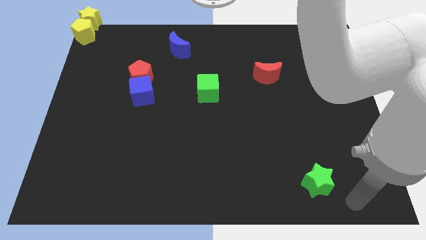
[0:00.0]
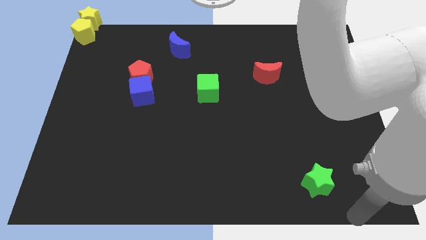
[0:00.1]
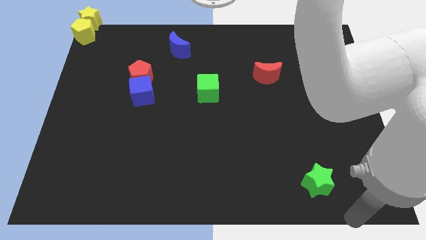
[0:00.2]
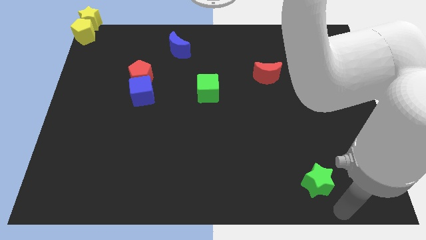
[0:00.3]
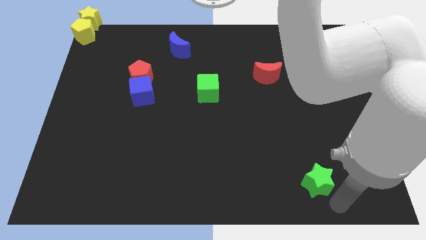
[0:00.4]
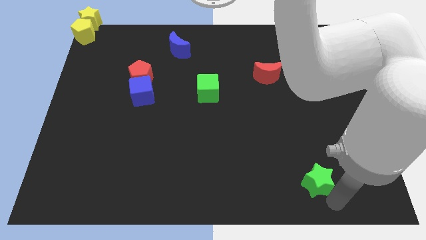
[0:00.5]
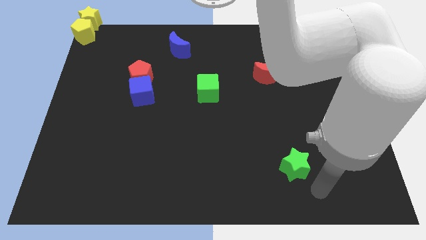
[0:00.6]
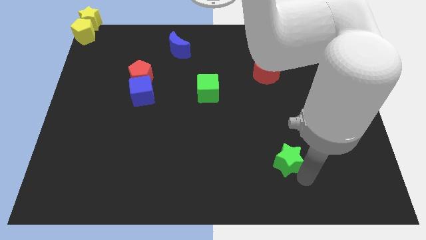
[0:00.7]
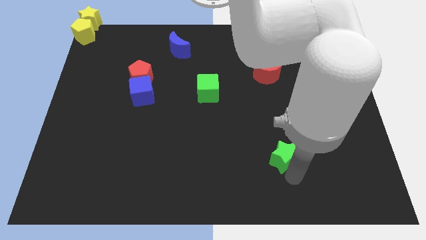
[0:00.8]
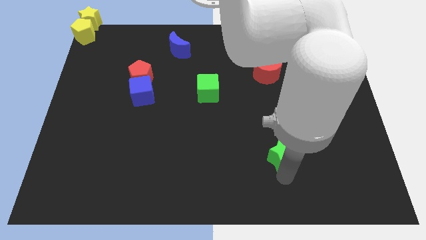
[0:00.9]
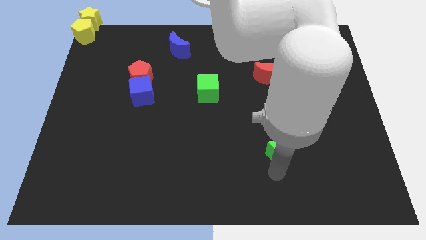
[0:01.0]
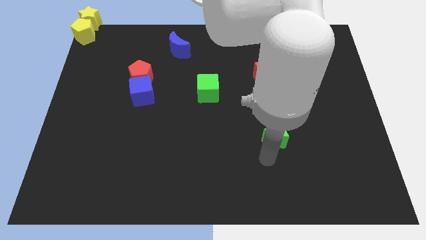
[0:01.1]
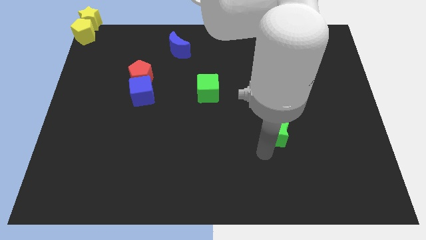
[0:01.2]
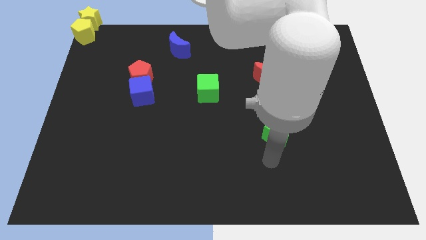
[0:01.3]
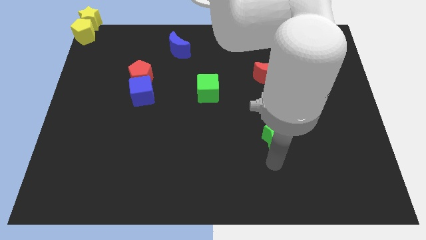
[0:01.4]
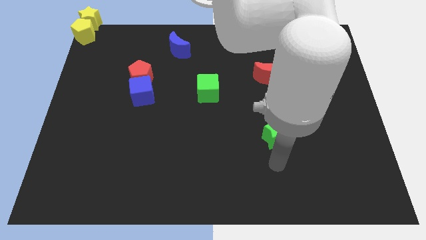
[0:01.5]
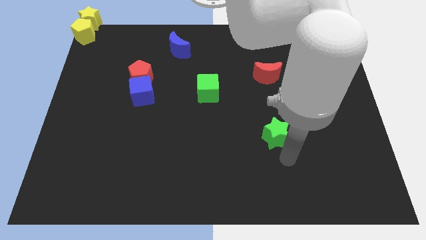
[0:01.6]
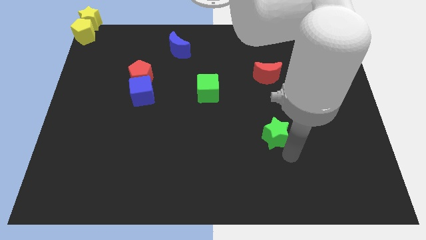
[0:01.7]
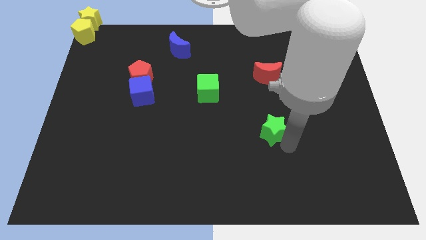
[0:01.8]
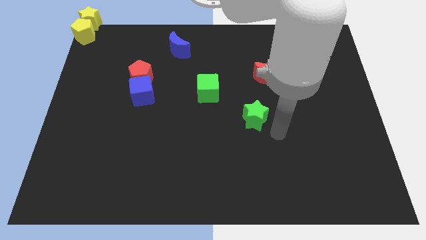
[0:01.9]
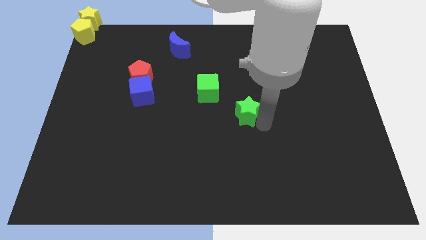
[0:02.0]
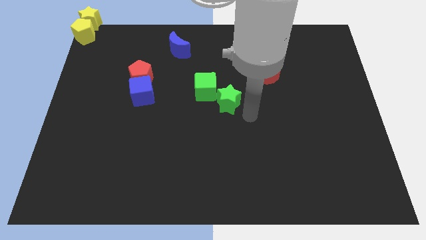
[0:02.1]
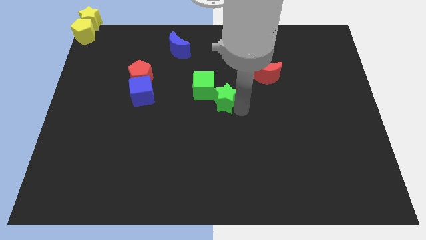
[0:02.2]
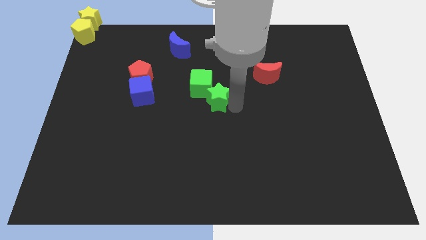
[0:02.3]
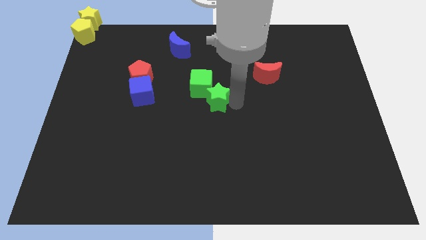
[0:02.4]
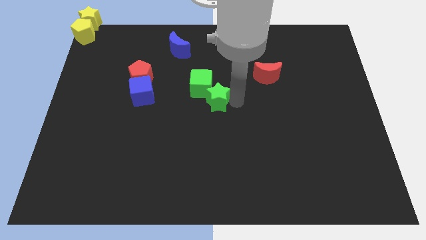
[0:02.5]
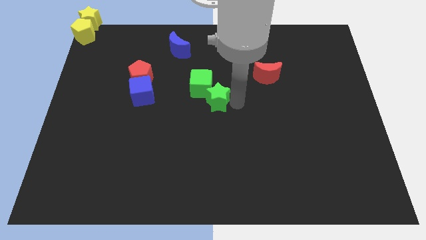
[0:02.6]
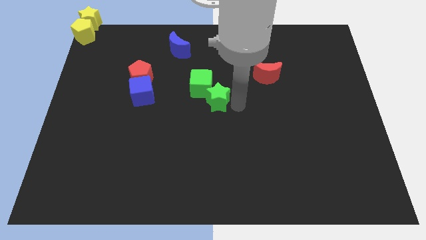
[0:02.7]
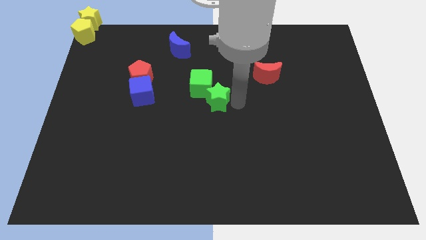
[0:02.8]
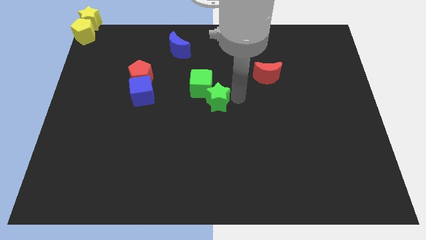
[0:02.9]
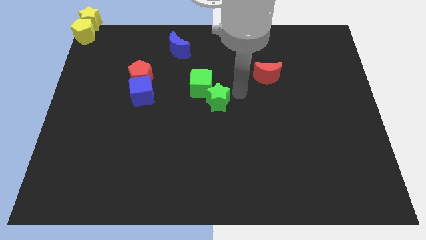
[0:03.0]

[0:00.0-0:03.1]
push the green star to the bottom right to the green cube

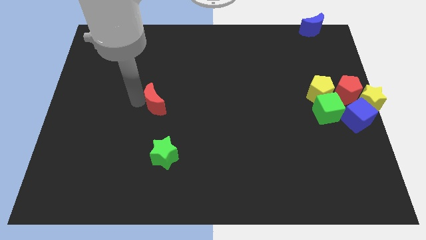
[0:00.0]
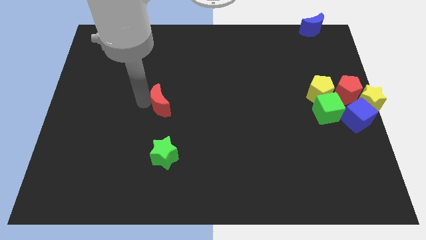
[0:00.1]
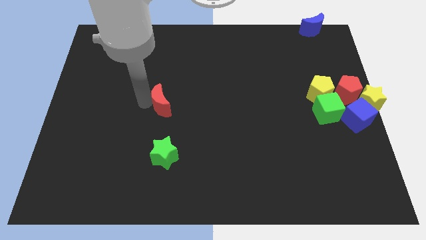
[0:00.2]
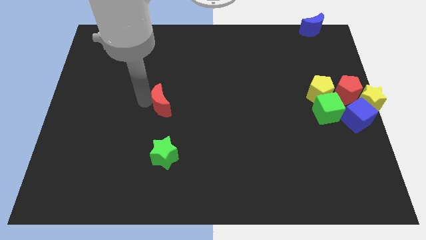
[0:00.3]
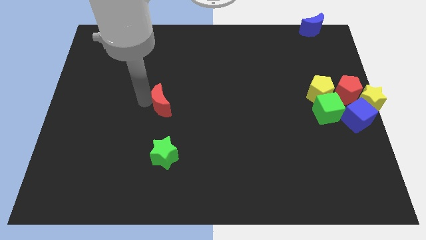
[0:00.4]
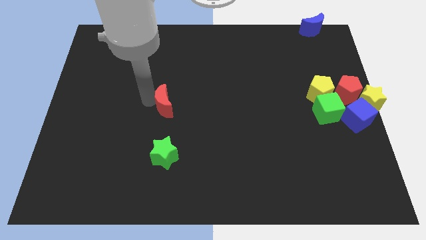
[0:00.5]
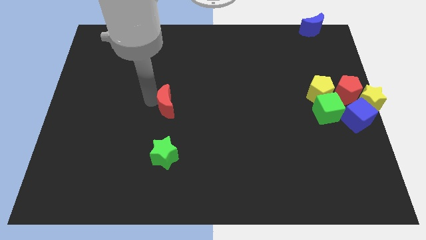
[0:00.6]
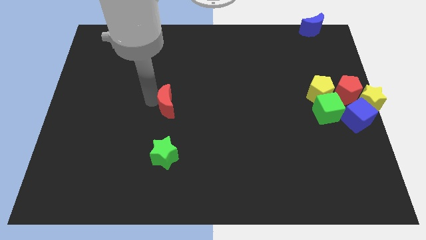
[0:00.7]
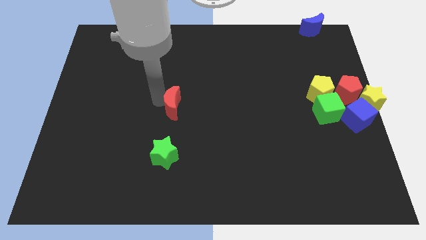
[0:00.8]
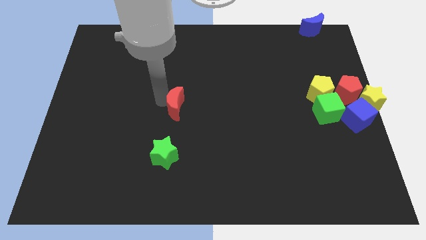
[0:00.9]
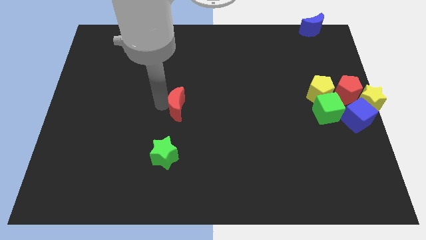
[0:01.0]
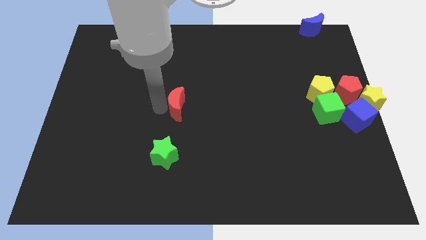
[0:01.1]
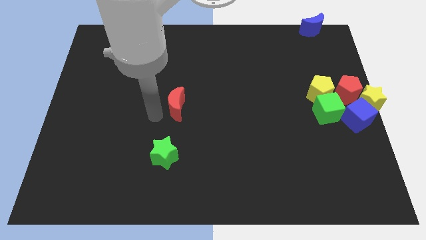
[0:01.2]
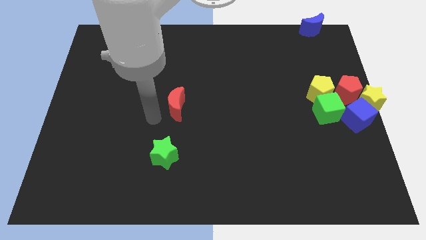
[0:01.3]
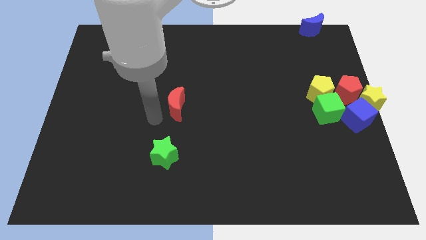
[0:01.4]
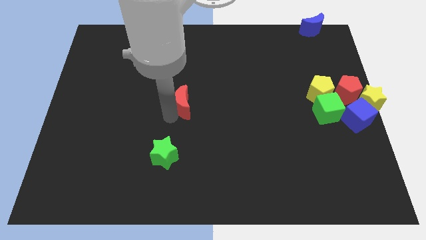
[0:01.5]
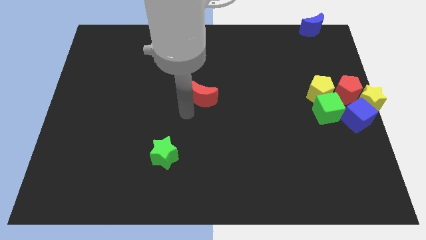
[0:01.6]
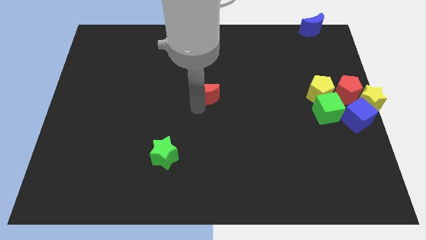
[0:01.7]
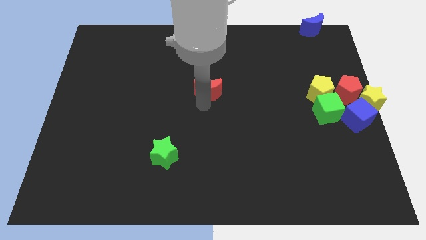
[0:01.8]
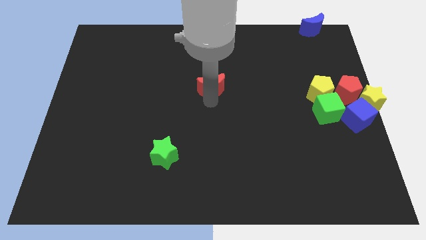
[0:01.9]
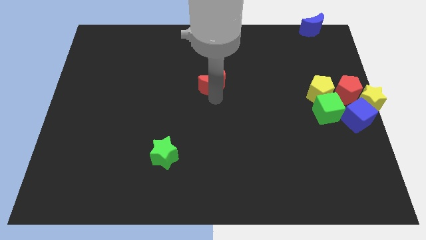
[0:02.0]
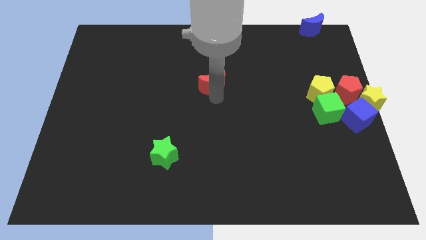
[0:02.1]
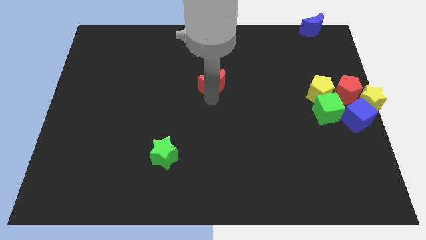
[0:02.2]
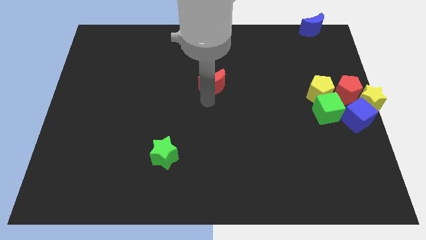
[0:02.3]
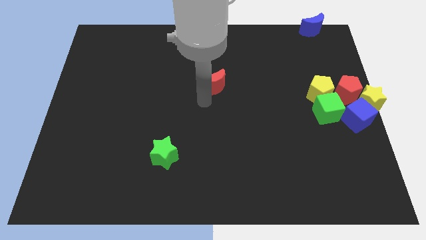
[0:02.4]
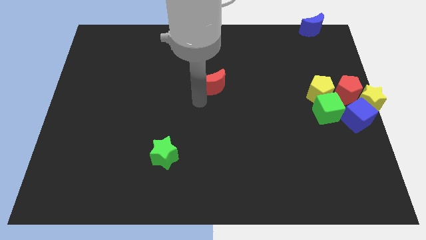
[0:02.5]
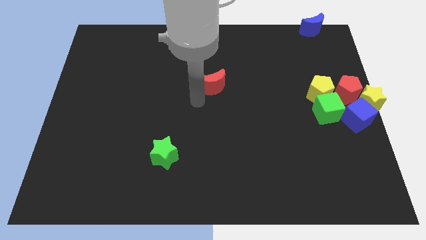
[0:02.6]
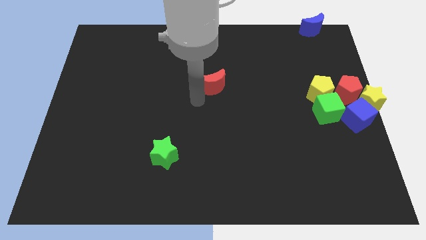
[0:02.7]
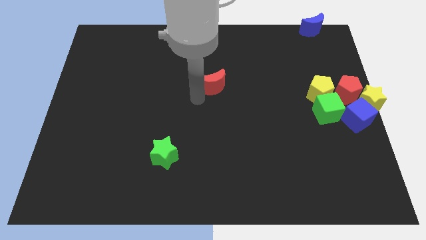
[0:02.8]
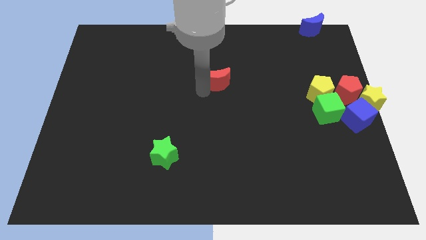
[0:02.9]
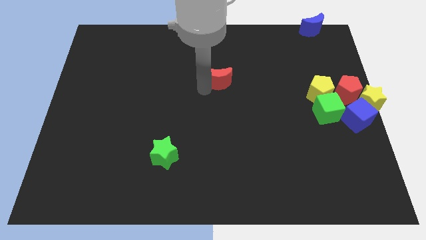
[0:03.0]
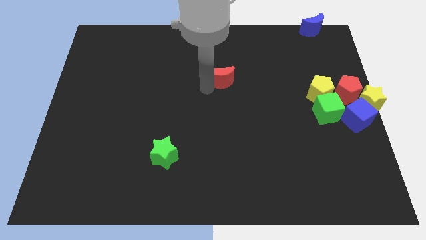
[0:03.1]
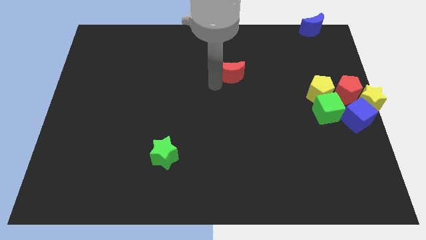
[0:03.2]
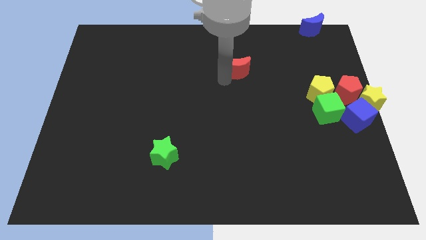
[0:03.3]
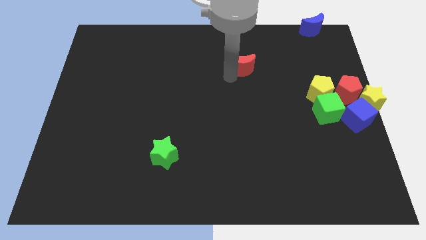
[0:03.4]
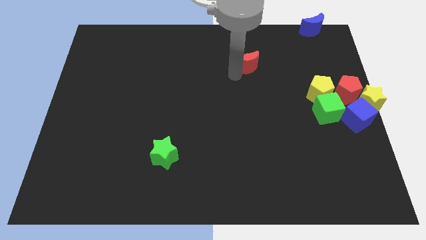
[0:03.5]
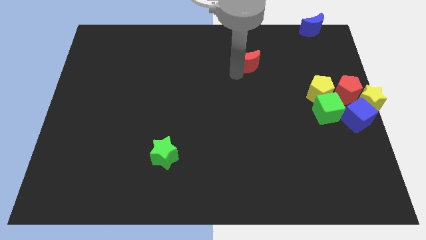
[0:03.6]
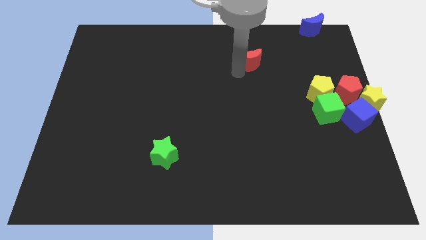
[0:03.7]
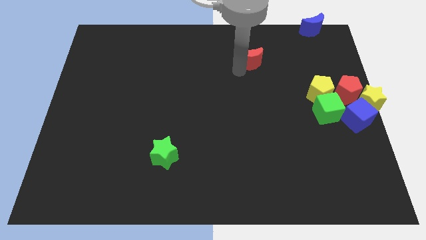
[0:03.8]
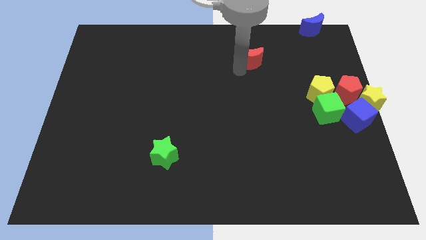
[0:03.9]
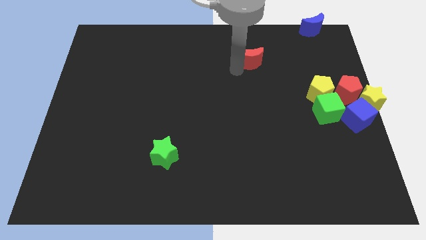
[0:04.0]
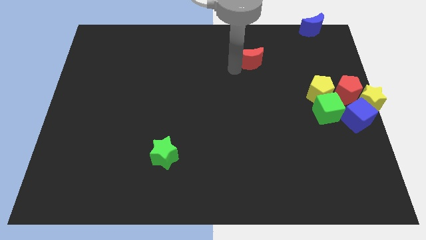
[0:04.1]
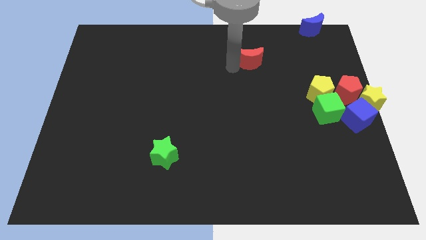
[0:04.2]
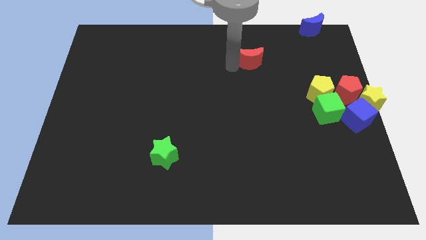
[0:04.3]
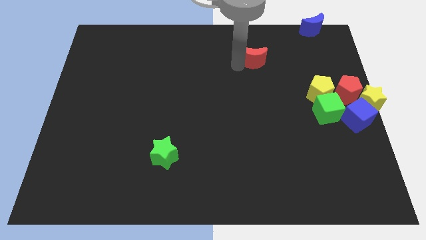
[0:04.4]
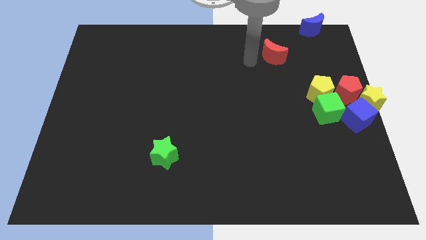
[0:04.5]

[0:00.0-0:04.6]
push the red moon towards the top right side of the board

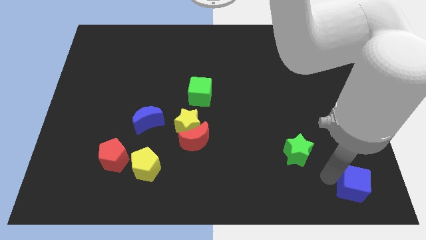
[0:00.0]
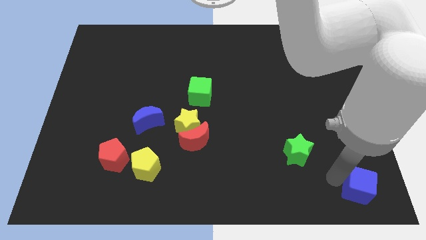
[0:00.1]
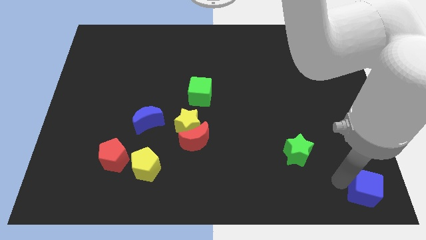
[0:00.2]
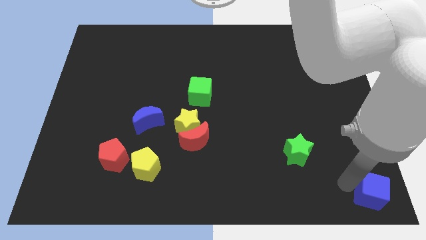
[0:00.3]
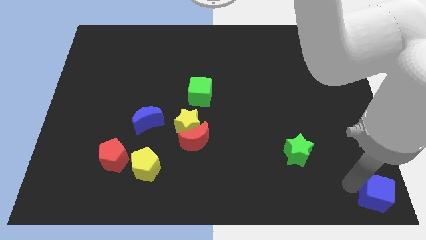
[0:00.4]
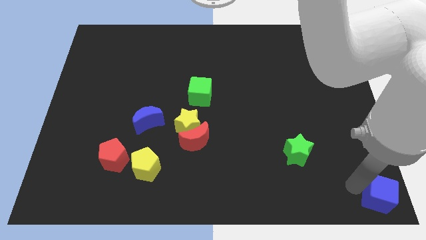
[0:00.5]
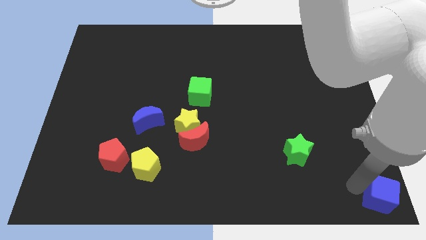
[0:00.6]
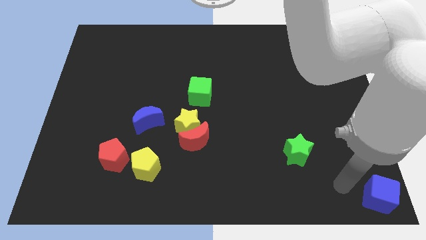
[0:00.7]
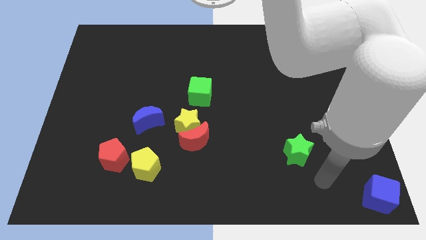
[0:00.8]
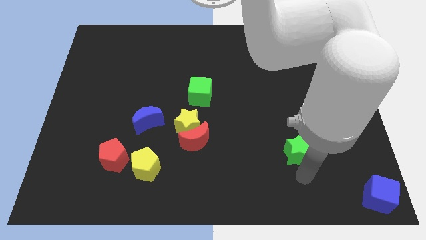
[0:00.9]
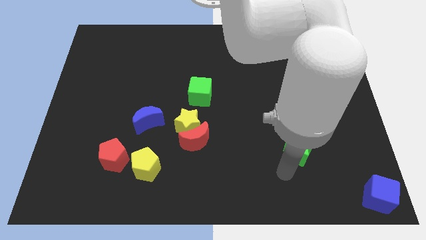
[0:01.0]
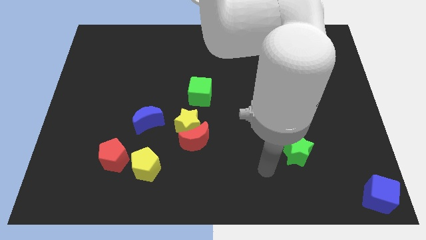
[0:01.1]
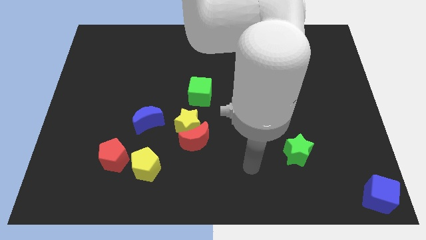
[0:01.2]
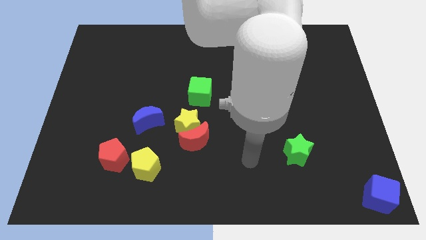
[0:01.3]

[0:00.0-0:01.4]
push blue cube to the right bottom corner of the board
